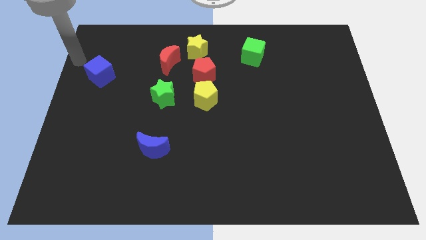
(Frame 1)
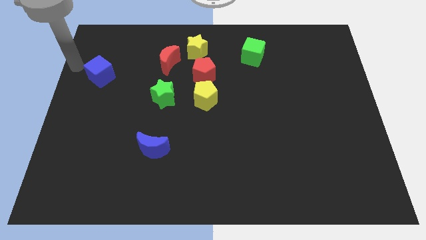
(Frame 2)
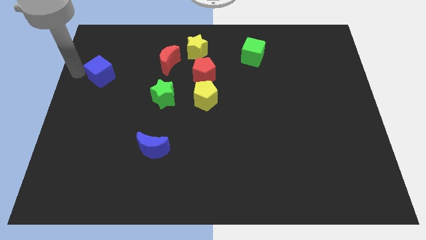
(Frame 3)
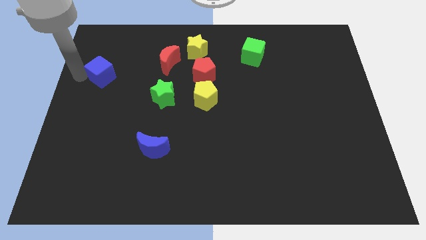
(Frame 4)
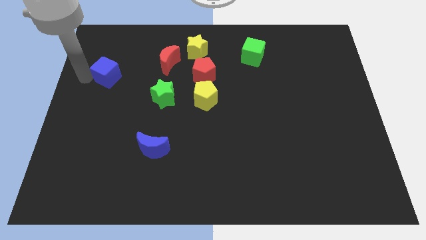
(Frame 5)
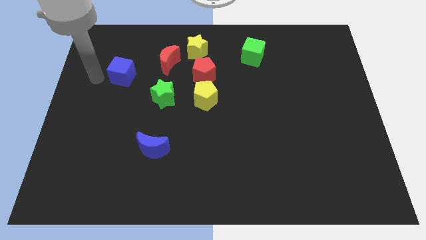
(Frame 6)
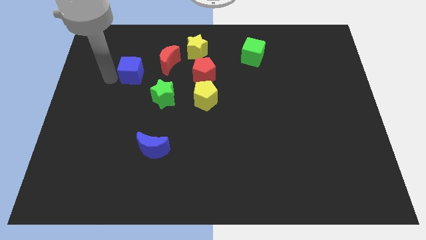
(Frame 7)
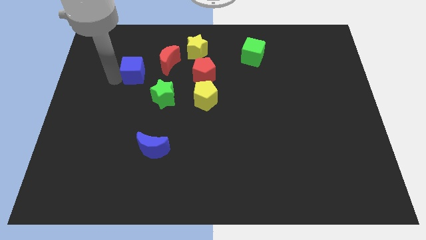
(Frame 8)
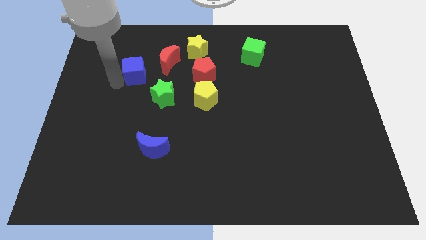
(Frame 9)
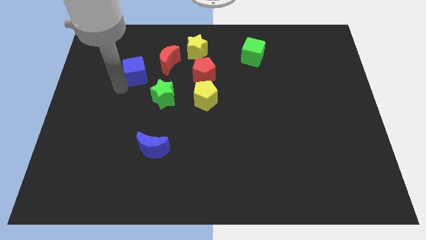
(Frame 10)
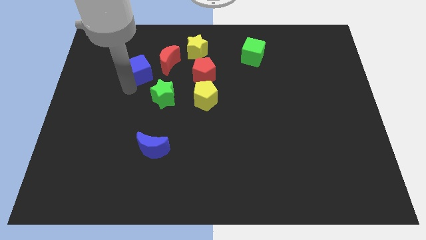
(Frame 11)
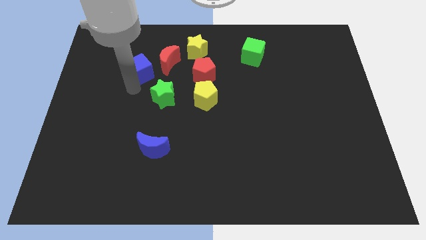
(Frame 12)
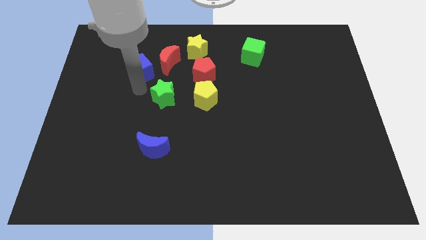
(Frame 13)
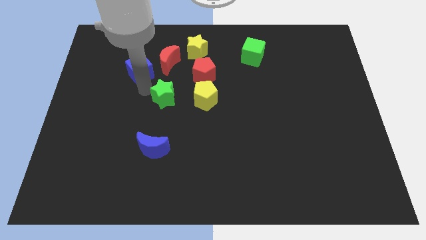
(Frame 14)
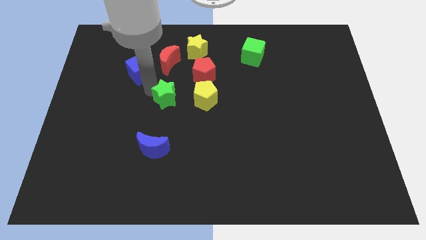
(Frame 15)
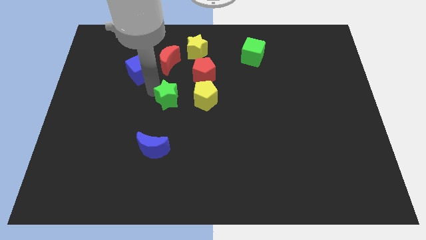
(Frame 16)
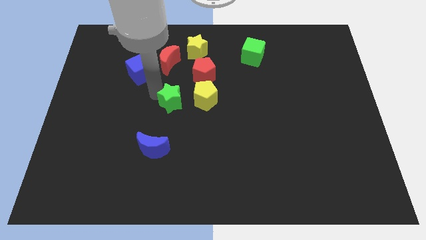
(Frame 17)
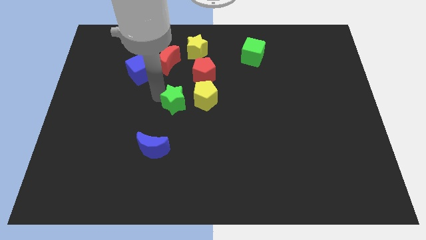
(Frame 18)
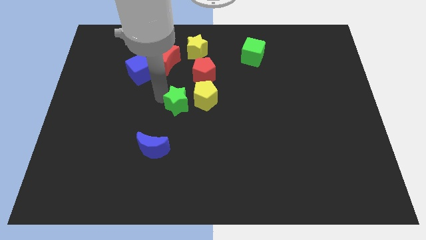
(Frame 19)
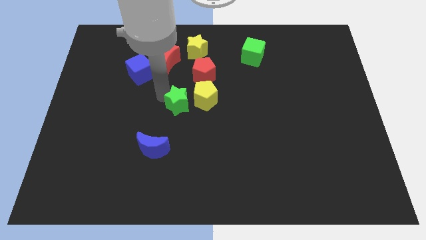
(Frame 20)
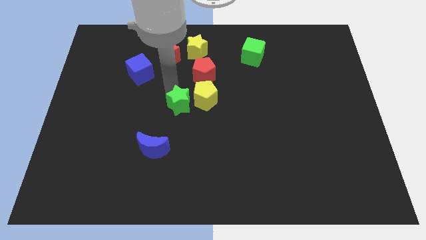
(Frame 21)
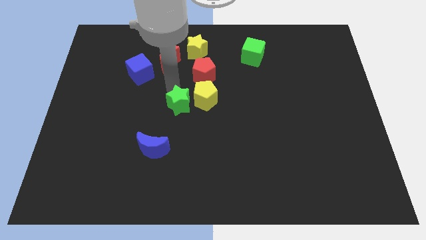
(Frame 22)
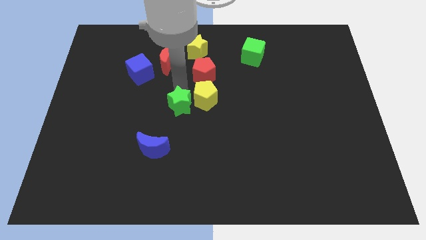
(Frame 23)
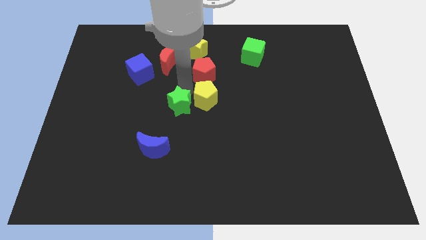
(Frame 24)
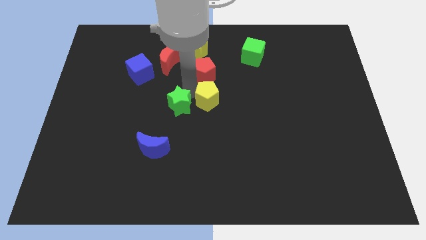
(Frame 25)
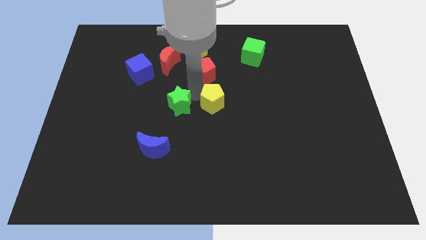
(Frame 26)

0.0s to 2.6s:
place the green star left to the yellow pentagon

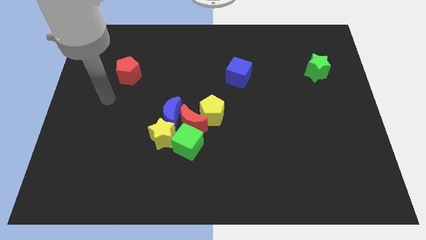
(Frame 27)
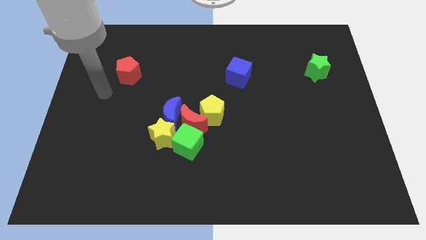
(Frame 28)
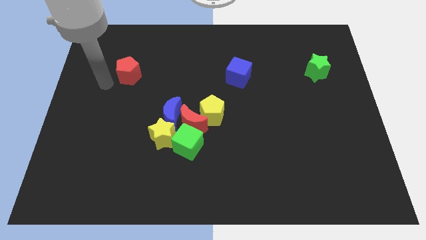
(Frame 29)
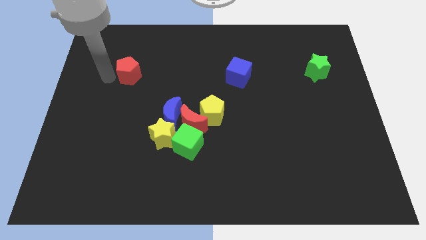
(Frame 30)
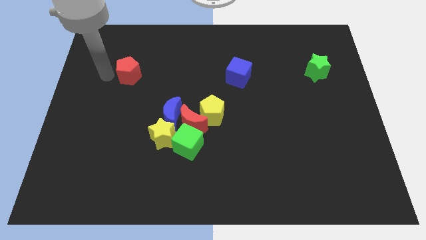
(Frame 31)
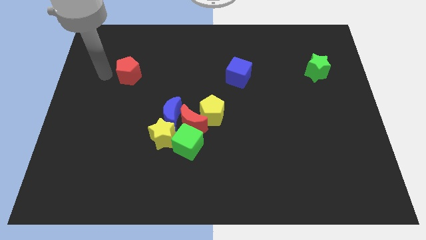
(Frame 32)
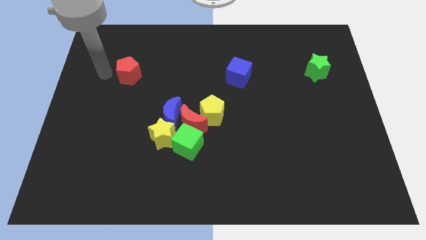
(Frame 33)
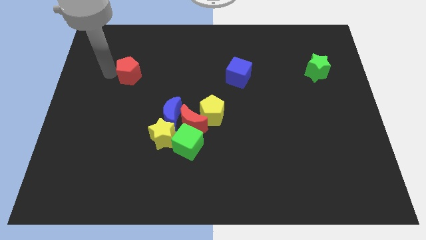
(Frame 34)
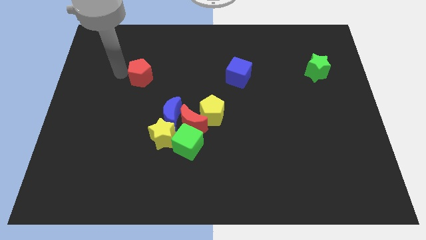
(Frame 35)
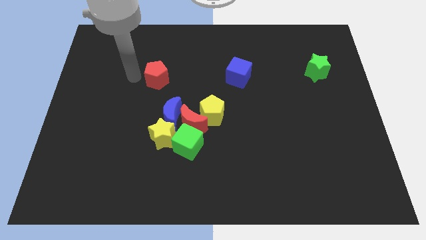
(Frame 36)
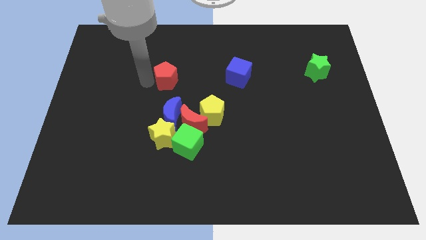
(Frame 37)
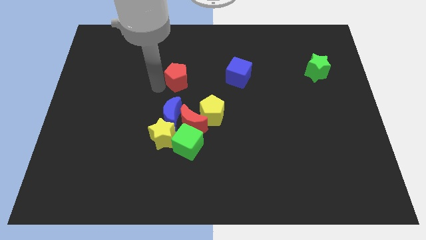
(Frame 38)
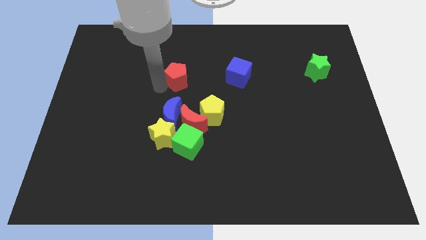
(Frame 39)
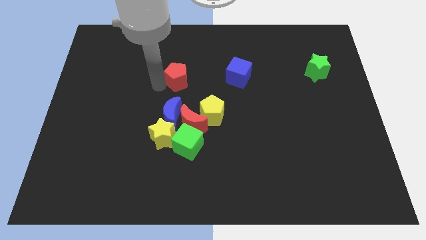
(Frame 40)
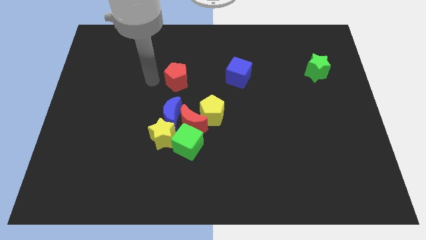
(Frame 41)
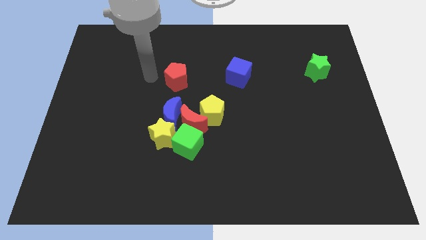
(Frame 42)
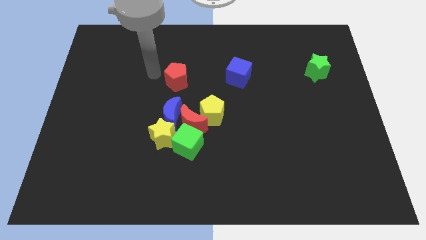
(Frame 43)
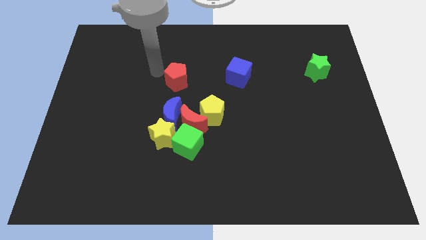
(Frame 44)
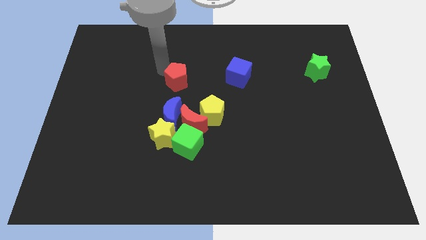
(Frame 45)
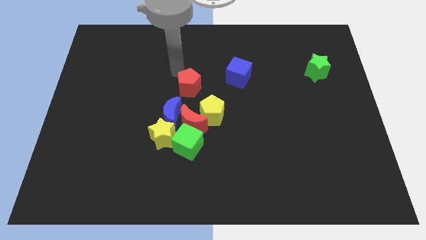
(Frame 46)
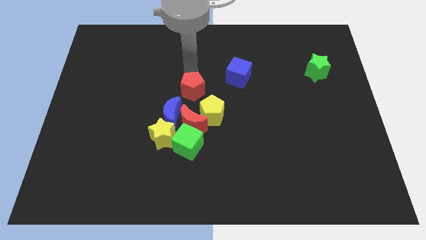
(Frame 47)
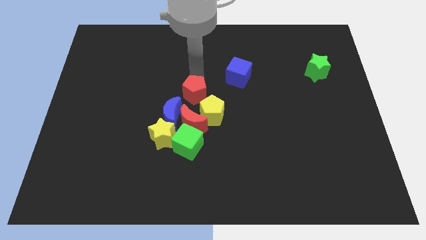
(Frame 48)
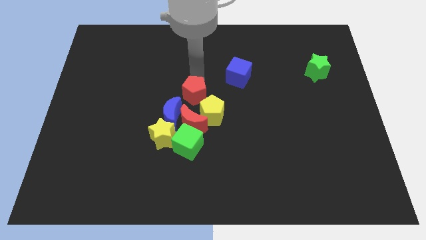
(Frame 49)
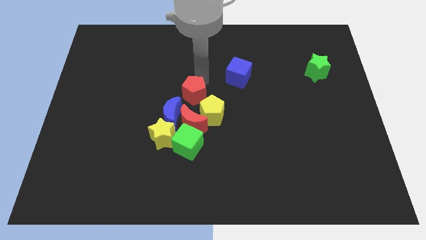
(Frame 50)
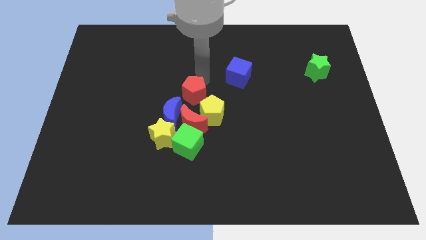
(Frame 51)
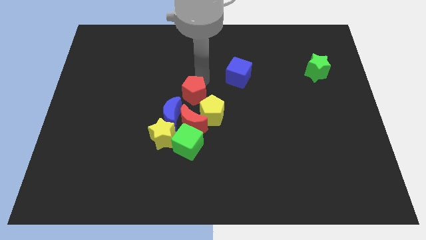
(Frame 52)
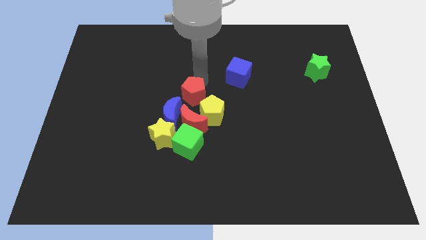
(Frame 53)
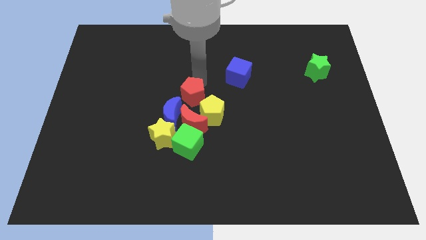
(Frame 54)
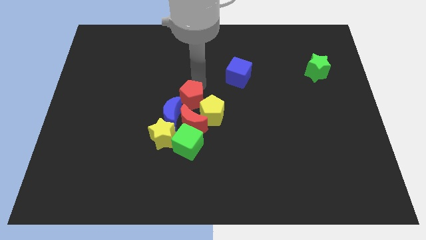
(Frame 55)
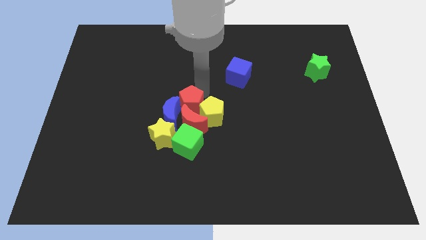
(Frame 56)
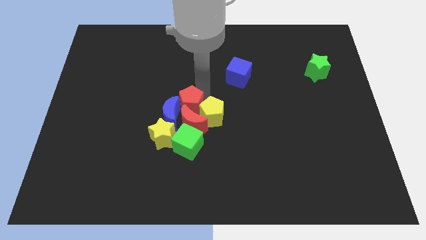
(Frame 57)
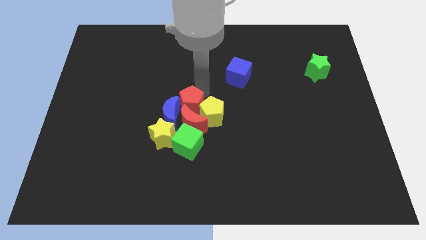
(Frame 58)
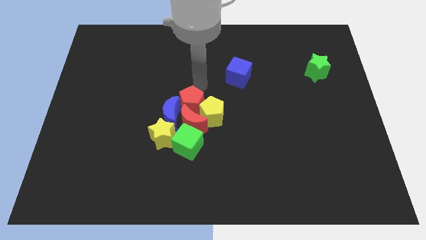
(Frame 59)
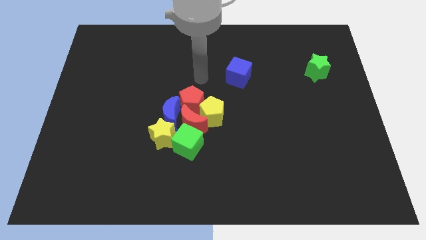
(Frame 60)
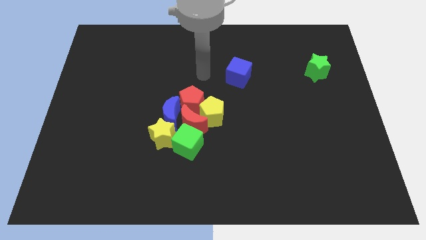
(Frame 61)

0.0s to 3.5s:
put the red pentagon above the red moon

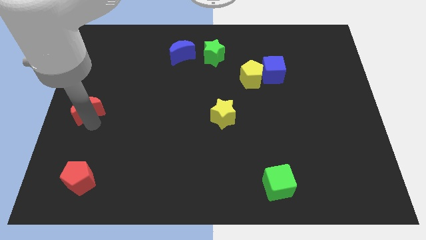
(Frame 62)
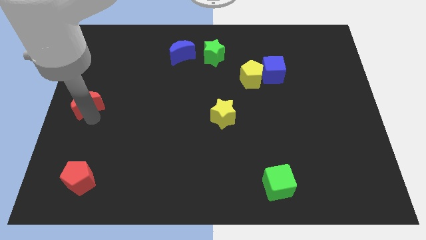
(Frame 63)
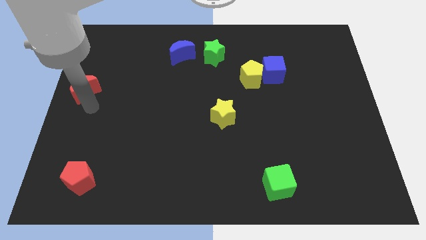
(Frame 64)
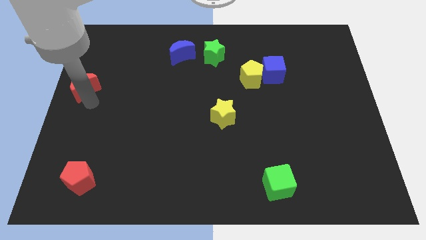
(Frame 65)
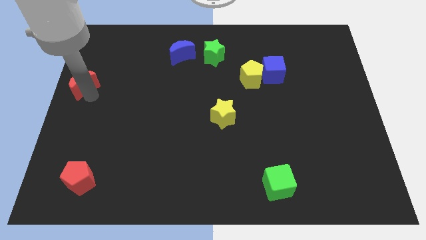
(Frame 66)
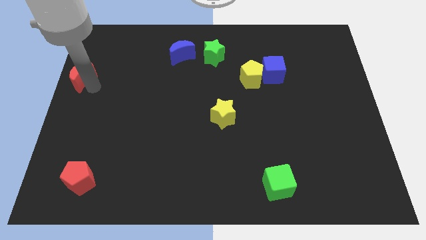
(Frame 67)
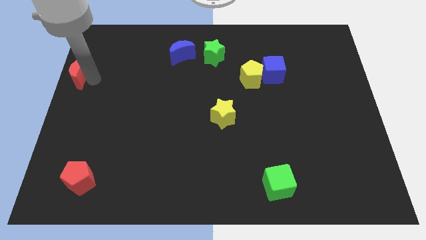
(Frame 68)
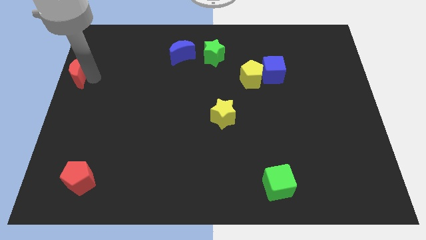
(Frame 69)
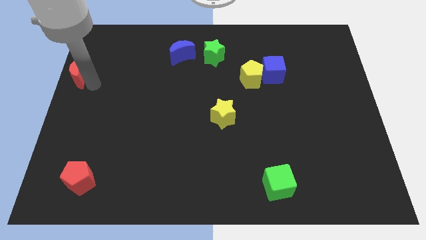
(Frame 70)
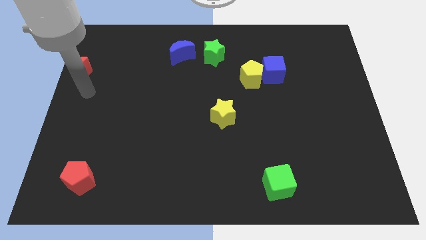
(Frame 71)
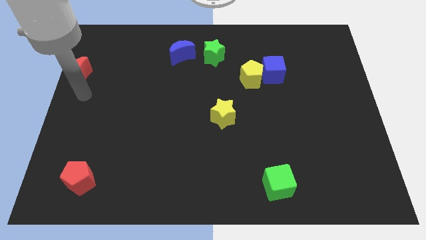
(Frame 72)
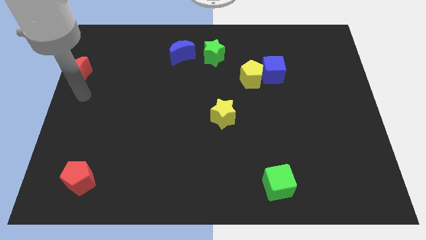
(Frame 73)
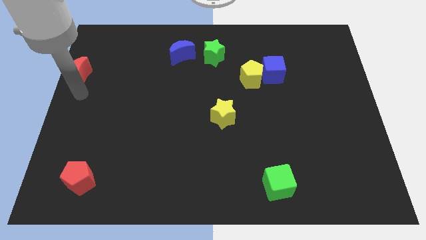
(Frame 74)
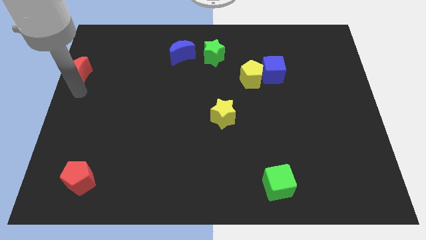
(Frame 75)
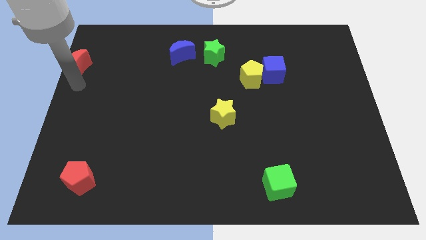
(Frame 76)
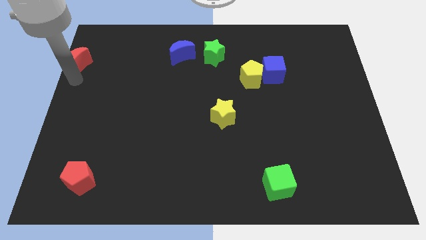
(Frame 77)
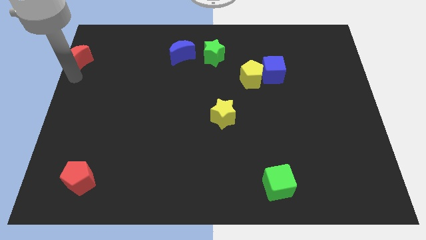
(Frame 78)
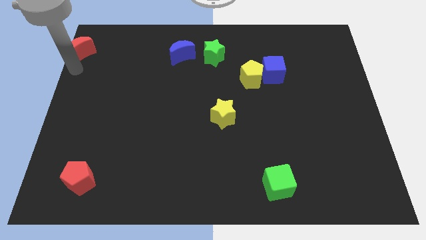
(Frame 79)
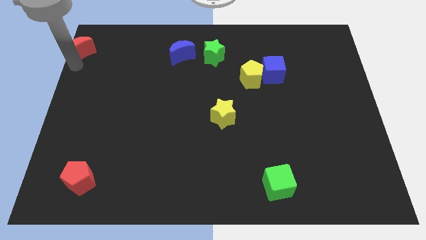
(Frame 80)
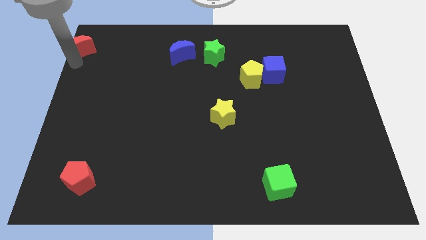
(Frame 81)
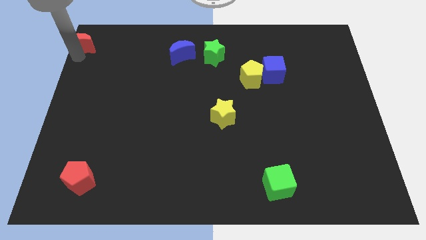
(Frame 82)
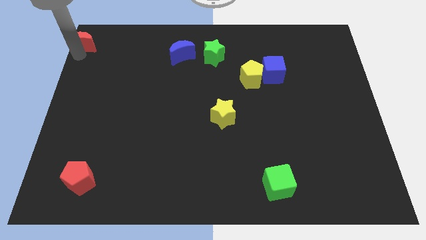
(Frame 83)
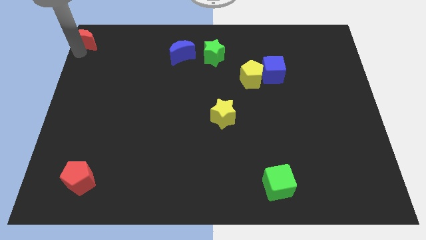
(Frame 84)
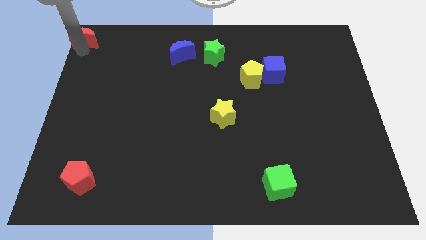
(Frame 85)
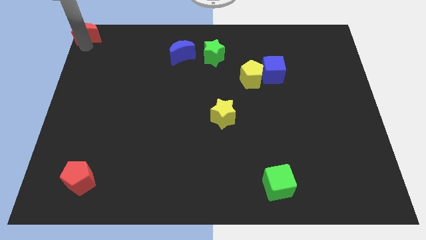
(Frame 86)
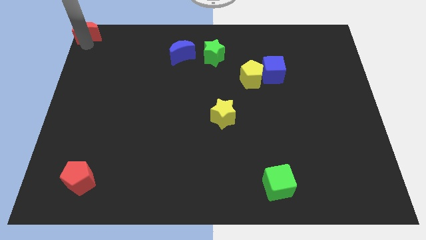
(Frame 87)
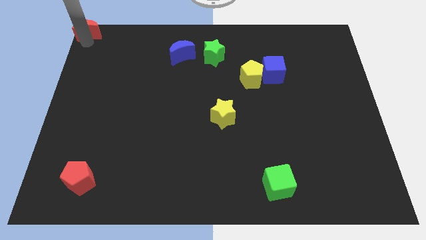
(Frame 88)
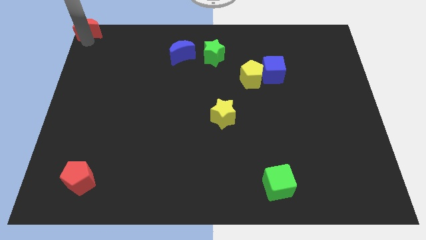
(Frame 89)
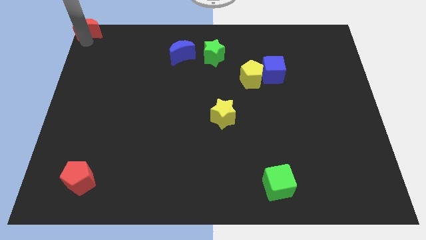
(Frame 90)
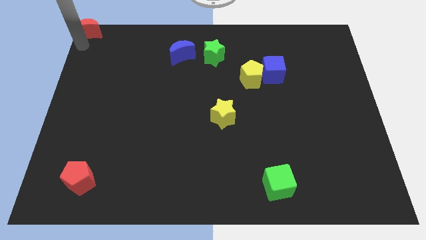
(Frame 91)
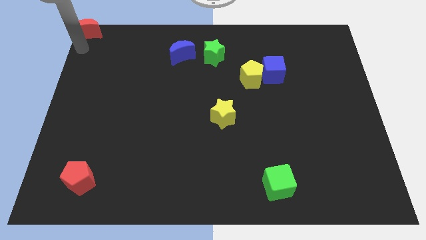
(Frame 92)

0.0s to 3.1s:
move the red crescent to the top left corner of the board
